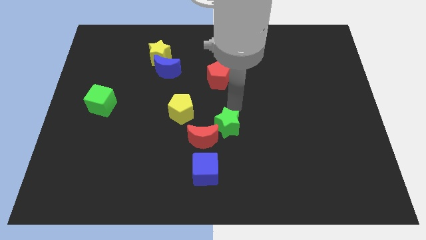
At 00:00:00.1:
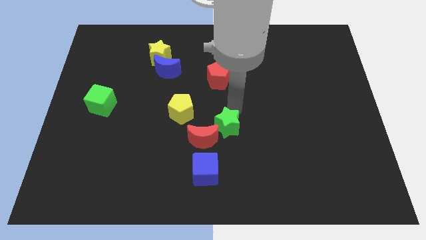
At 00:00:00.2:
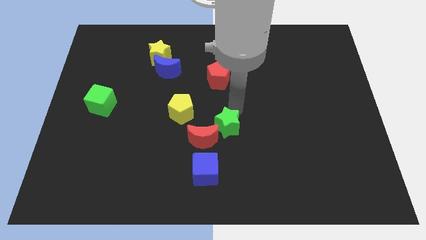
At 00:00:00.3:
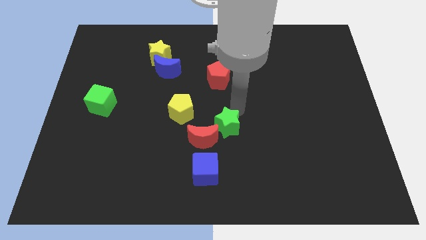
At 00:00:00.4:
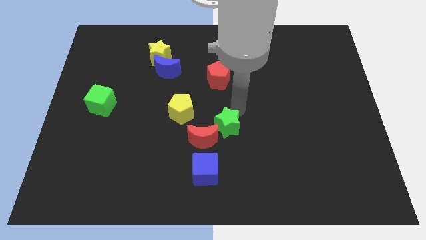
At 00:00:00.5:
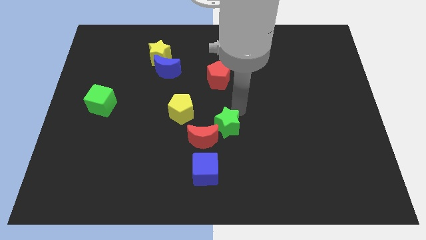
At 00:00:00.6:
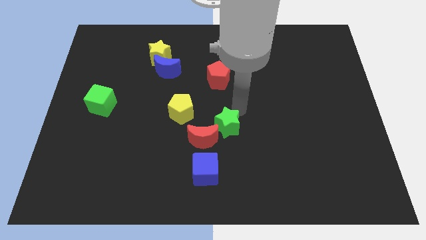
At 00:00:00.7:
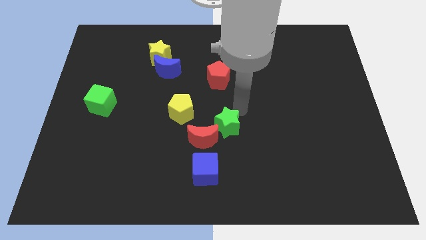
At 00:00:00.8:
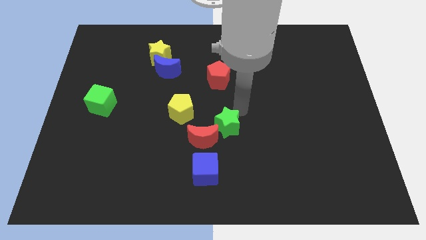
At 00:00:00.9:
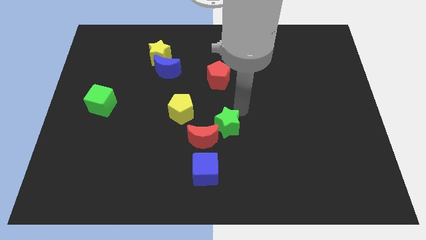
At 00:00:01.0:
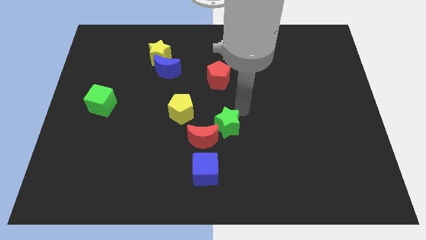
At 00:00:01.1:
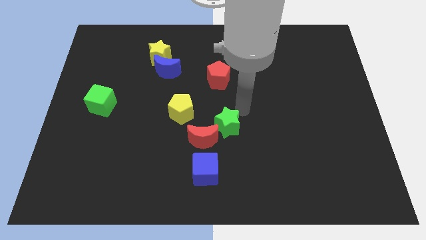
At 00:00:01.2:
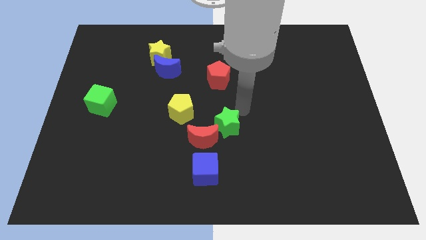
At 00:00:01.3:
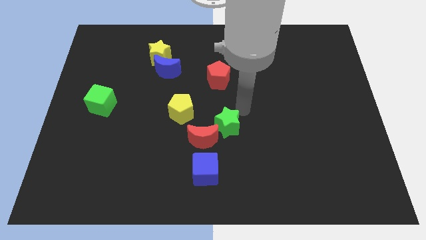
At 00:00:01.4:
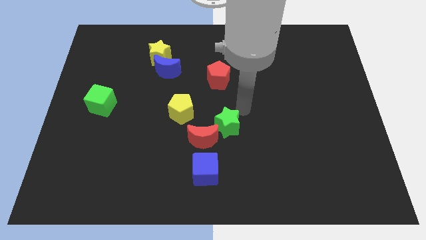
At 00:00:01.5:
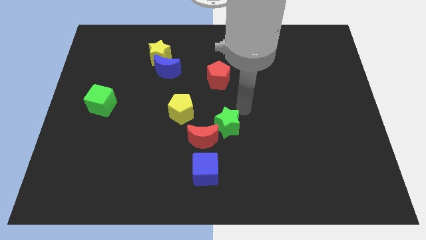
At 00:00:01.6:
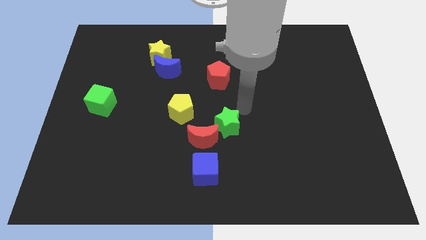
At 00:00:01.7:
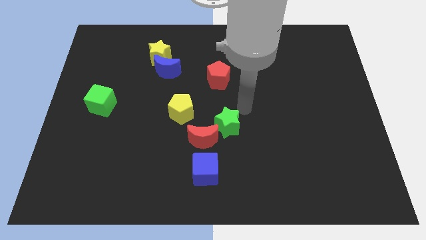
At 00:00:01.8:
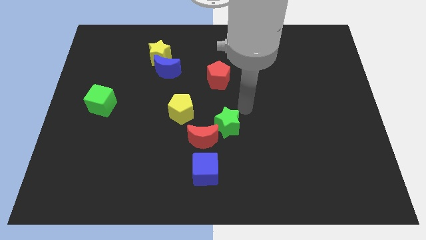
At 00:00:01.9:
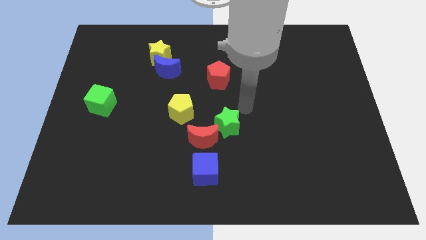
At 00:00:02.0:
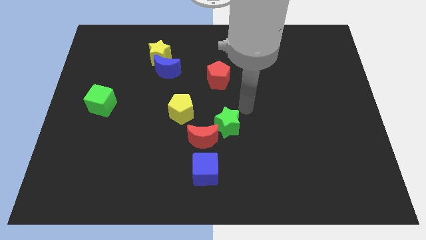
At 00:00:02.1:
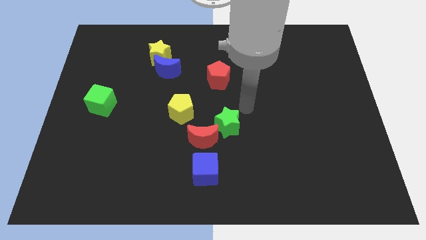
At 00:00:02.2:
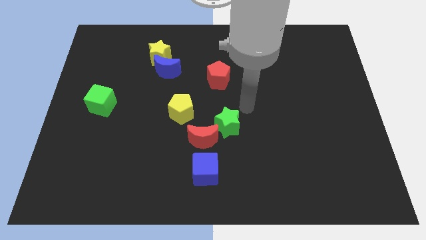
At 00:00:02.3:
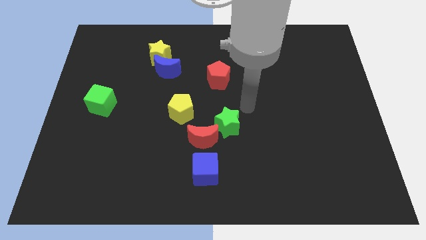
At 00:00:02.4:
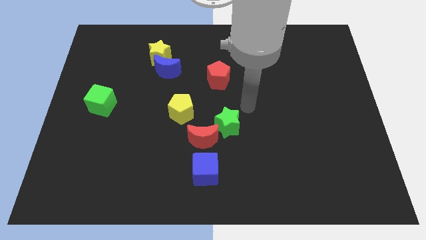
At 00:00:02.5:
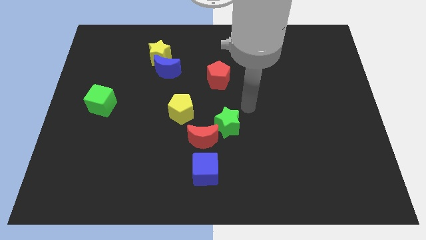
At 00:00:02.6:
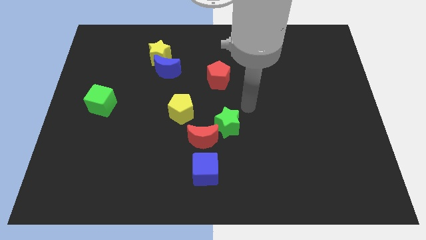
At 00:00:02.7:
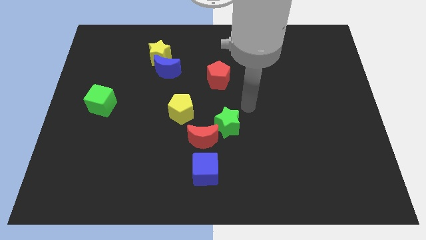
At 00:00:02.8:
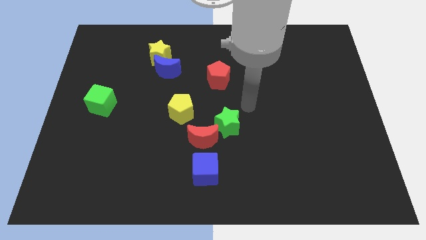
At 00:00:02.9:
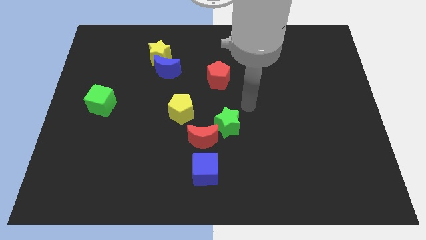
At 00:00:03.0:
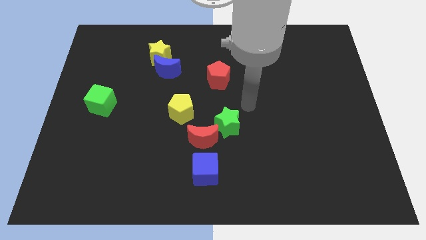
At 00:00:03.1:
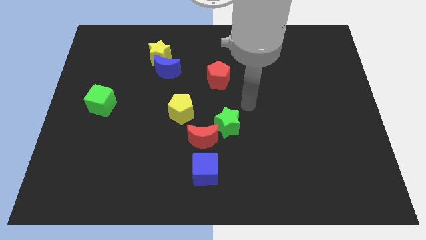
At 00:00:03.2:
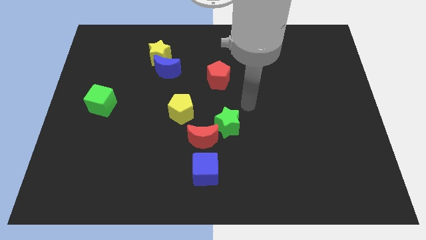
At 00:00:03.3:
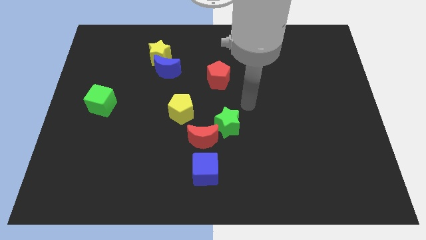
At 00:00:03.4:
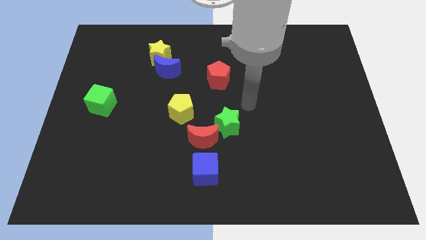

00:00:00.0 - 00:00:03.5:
move the arm away from the green star

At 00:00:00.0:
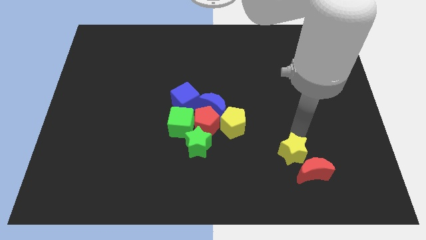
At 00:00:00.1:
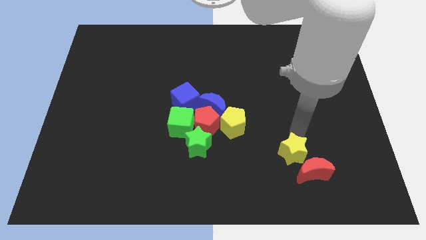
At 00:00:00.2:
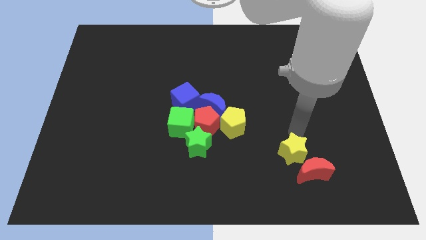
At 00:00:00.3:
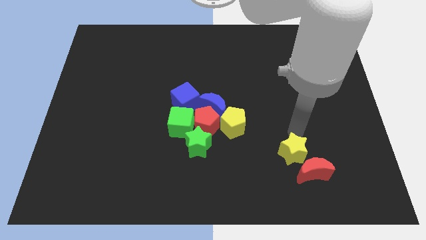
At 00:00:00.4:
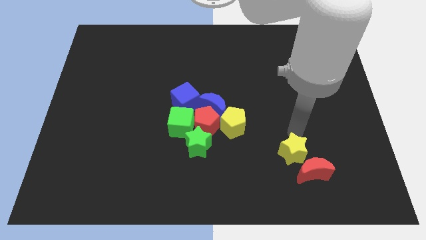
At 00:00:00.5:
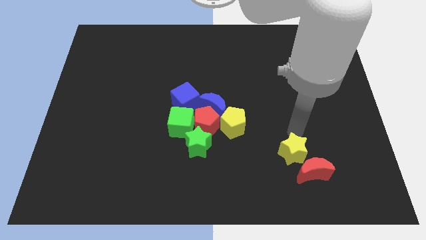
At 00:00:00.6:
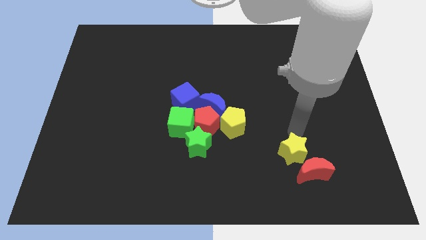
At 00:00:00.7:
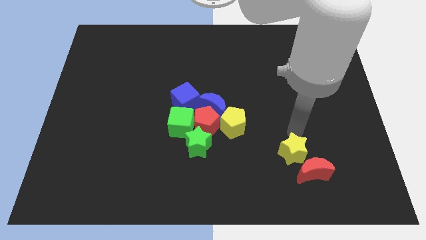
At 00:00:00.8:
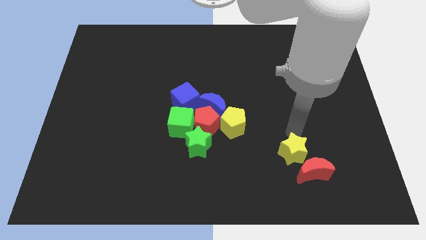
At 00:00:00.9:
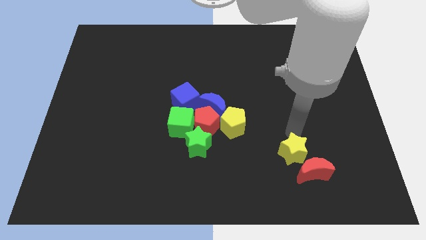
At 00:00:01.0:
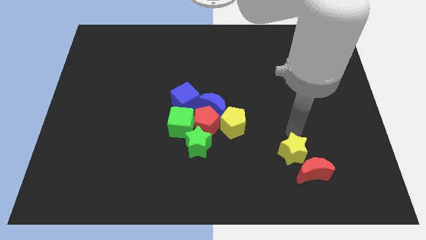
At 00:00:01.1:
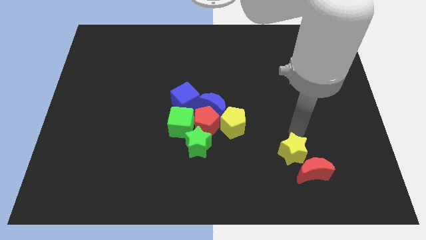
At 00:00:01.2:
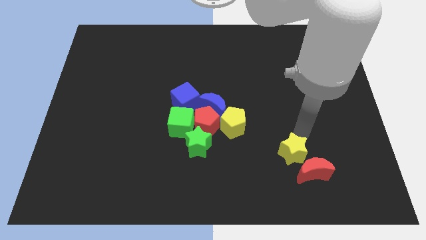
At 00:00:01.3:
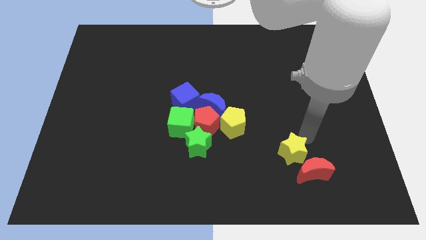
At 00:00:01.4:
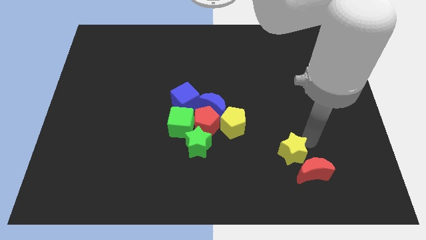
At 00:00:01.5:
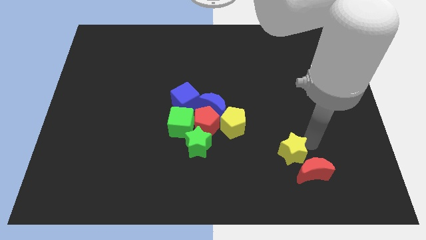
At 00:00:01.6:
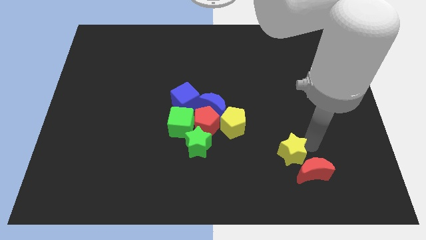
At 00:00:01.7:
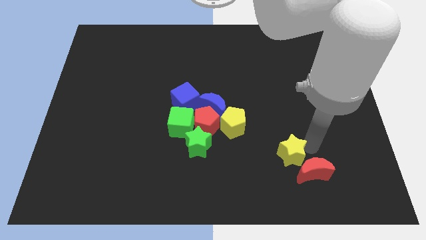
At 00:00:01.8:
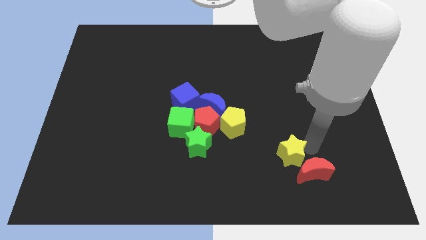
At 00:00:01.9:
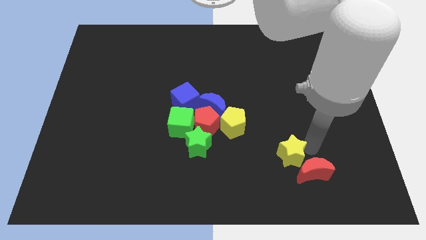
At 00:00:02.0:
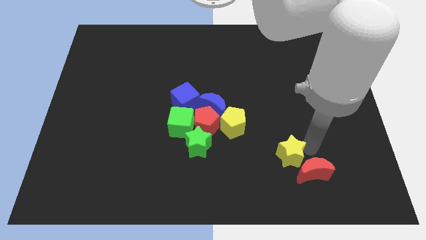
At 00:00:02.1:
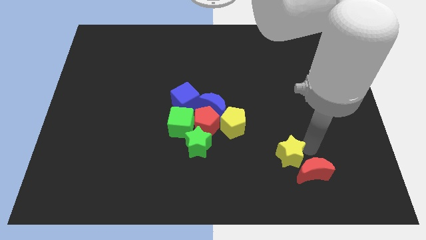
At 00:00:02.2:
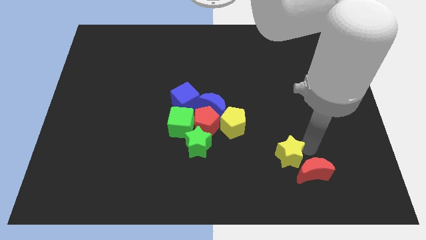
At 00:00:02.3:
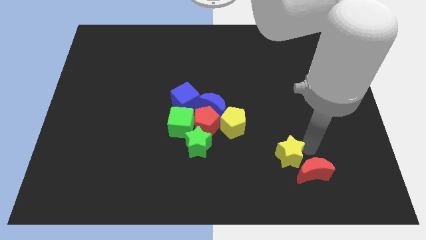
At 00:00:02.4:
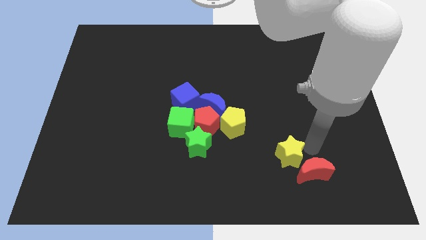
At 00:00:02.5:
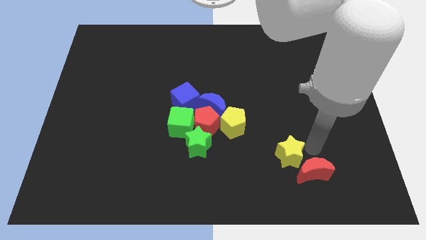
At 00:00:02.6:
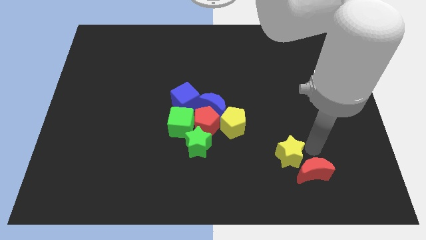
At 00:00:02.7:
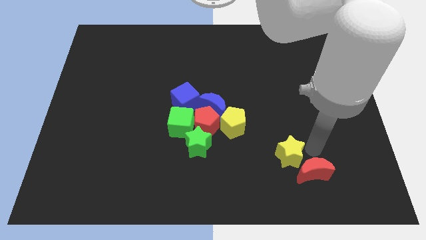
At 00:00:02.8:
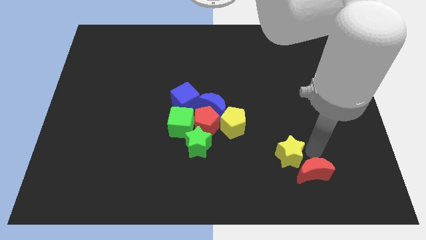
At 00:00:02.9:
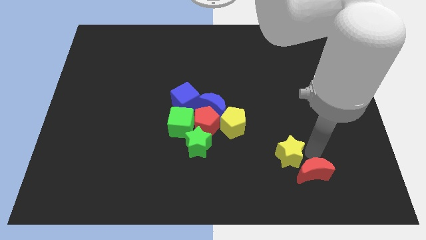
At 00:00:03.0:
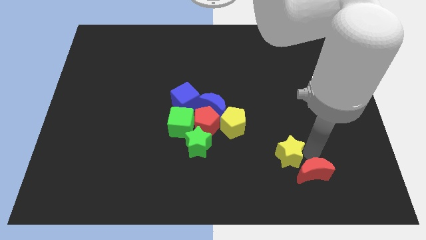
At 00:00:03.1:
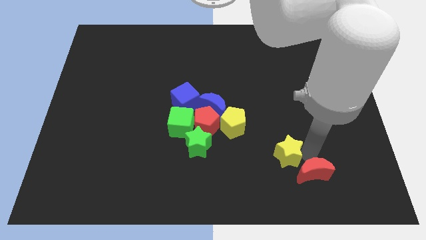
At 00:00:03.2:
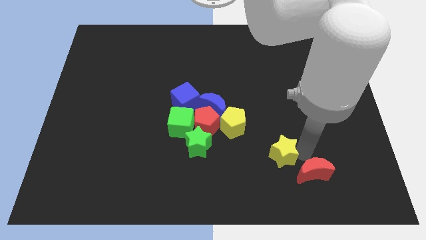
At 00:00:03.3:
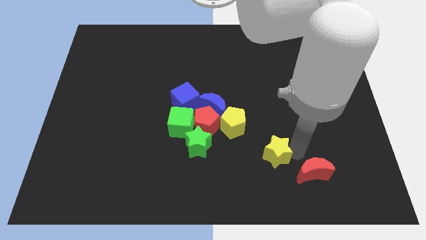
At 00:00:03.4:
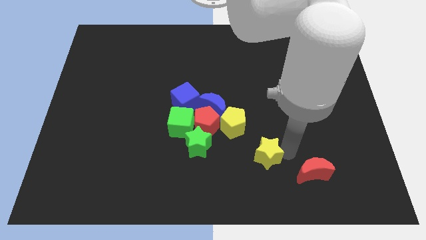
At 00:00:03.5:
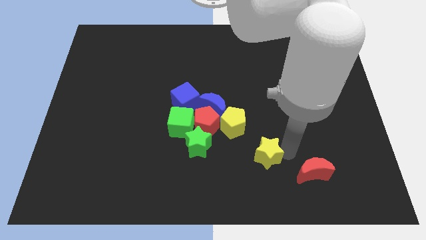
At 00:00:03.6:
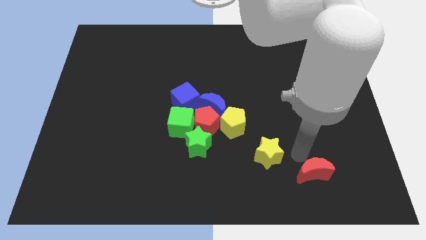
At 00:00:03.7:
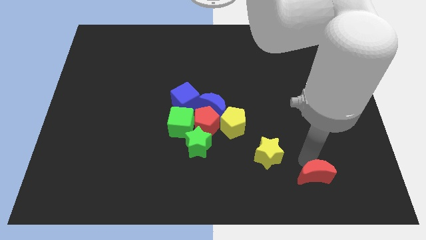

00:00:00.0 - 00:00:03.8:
move the yellow star slightly to the bottom right of the yellow pentagon

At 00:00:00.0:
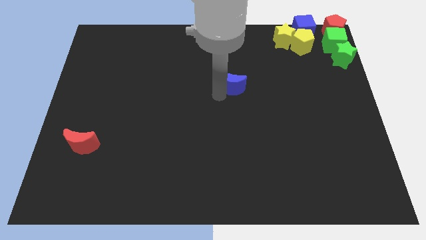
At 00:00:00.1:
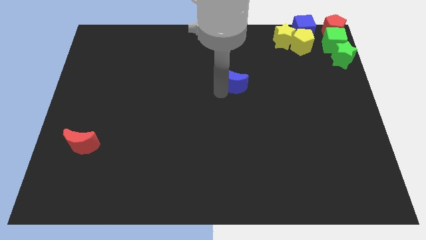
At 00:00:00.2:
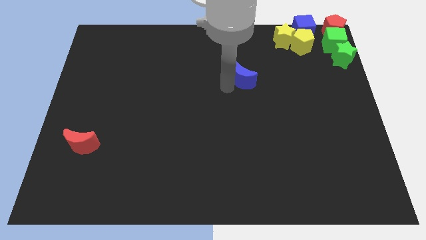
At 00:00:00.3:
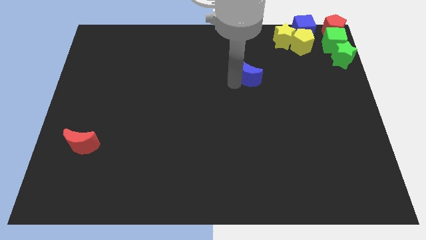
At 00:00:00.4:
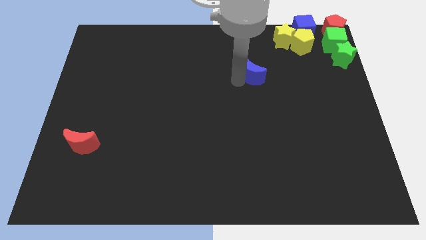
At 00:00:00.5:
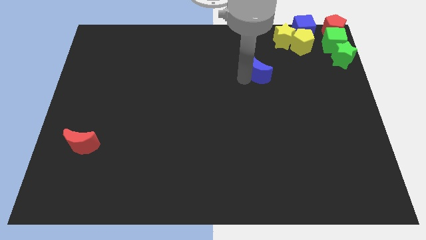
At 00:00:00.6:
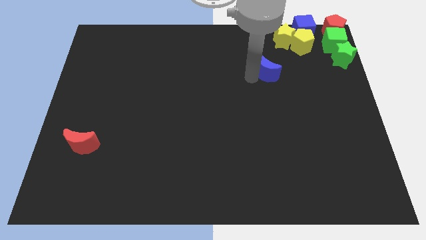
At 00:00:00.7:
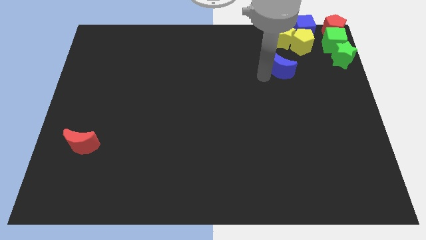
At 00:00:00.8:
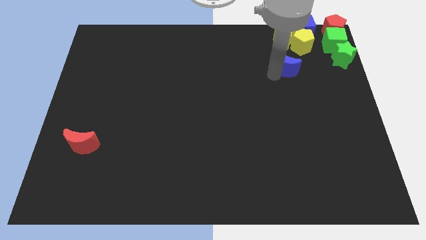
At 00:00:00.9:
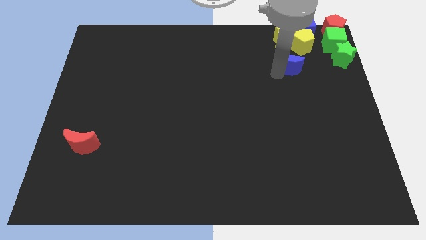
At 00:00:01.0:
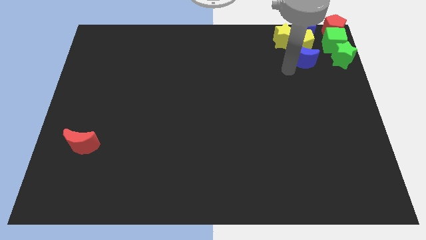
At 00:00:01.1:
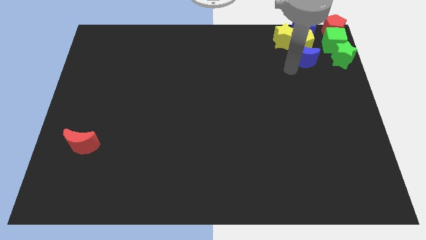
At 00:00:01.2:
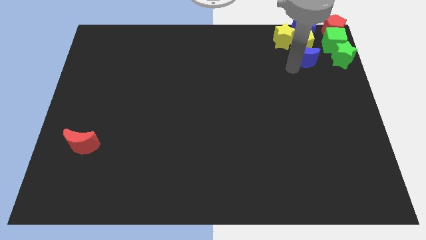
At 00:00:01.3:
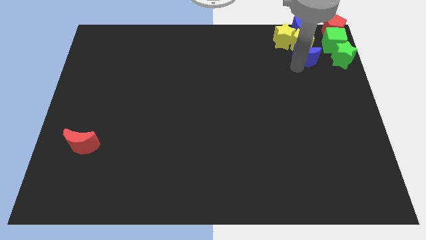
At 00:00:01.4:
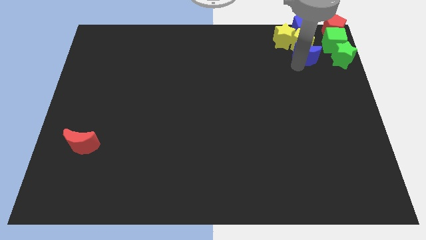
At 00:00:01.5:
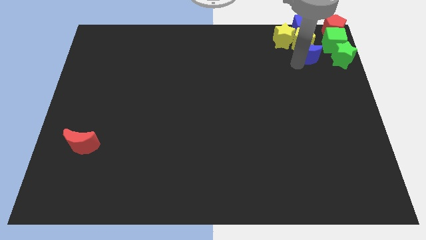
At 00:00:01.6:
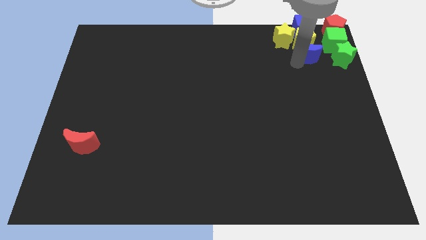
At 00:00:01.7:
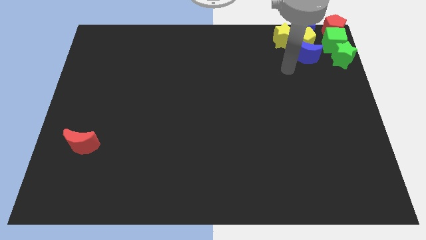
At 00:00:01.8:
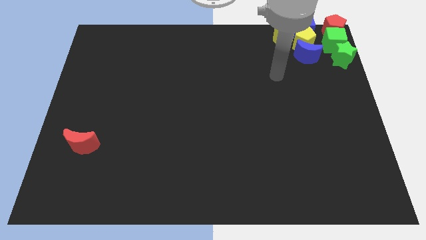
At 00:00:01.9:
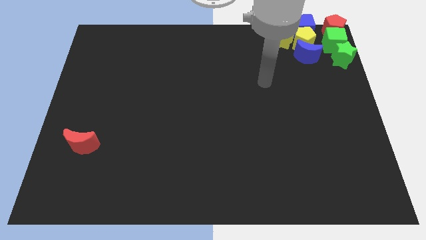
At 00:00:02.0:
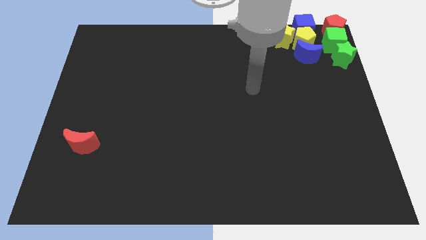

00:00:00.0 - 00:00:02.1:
drag blue moon to the bottom of the yellow pentagon
